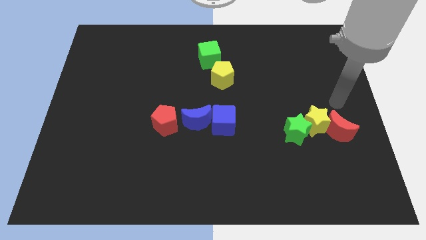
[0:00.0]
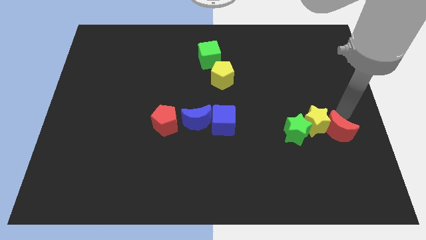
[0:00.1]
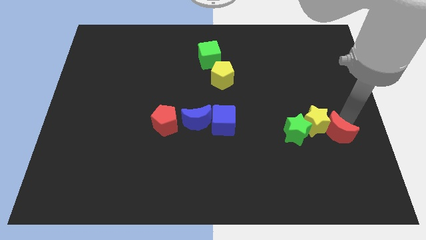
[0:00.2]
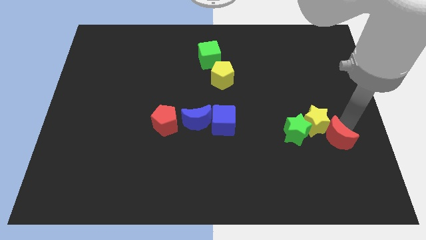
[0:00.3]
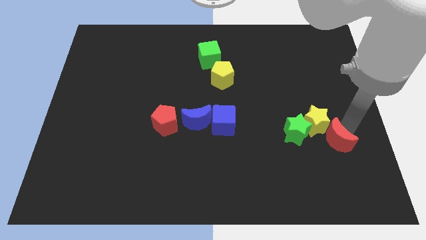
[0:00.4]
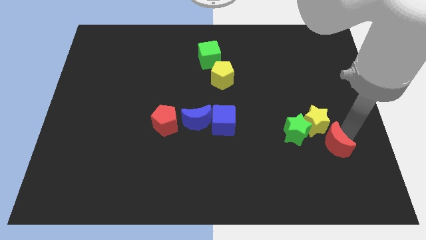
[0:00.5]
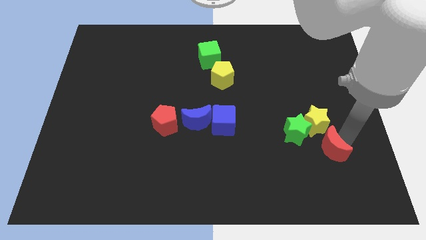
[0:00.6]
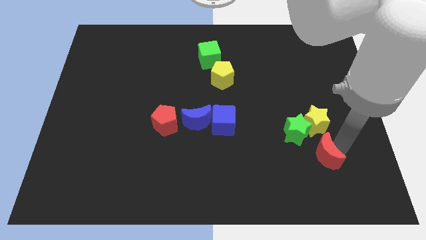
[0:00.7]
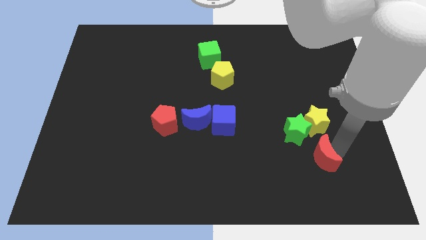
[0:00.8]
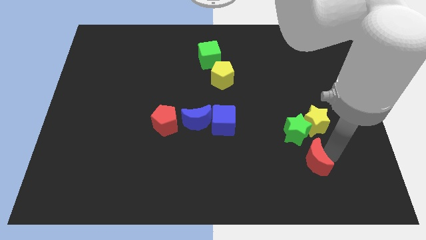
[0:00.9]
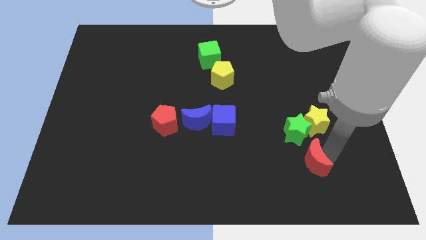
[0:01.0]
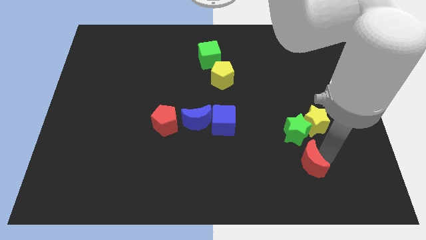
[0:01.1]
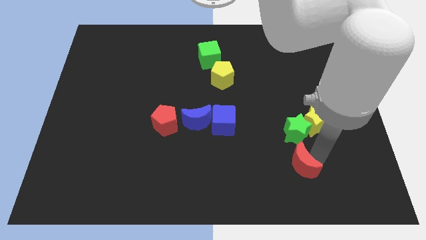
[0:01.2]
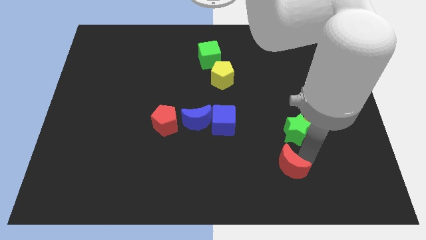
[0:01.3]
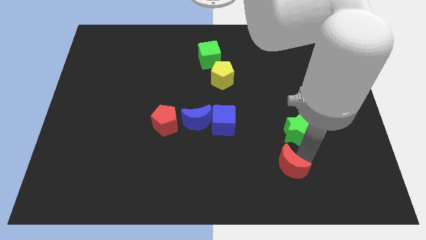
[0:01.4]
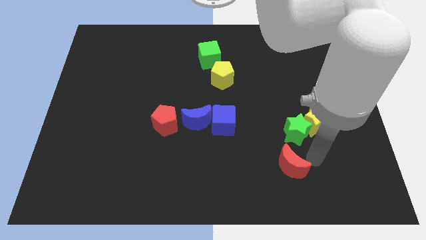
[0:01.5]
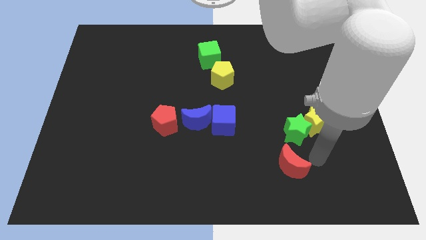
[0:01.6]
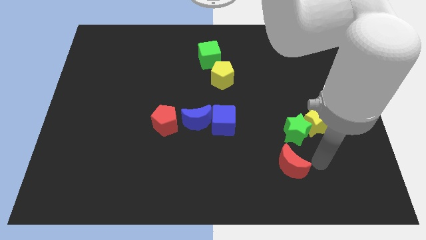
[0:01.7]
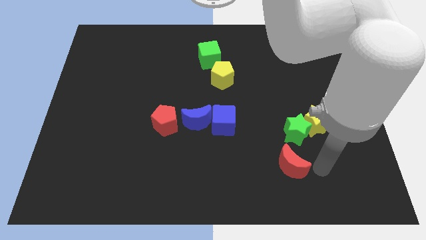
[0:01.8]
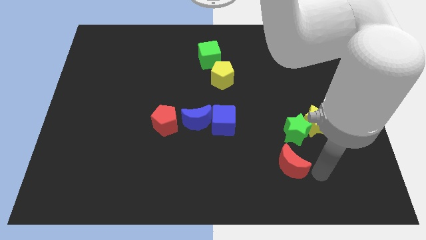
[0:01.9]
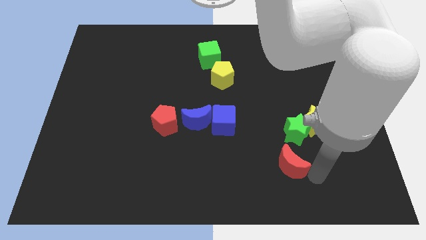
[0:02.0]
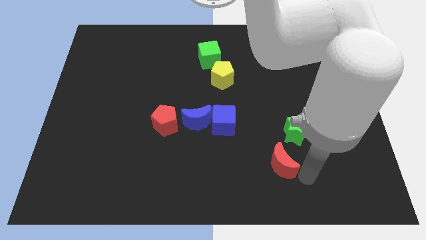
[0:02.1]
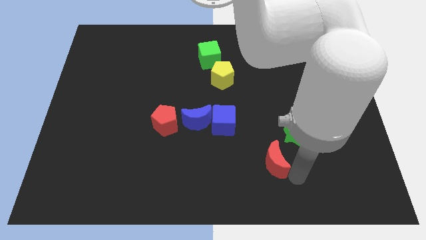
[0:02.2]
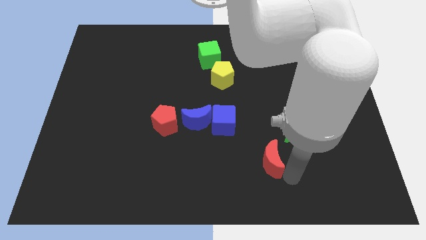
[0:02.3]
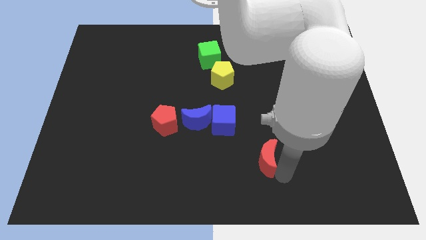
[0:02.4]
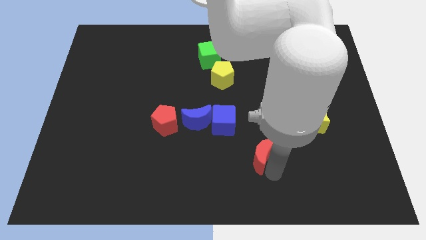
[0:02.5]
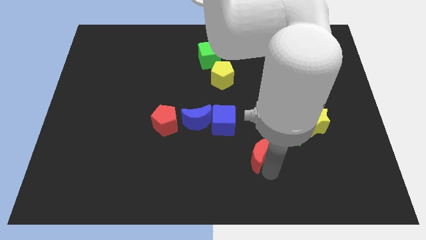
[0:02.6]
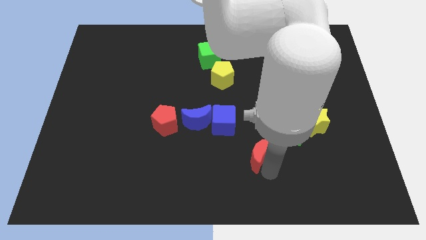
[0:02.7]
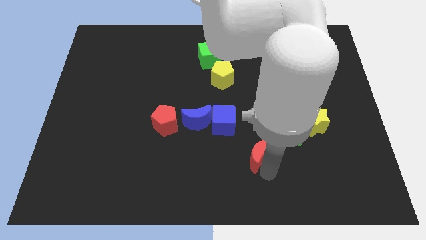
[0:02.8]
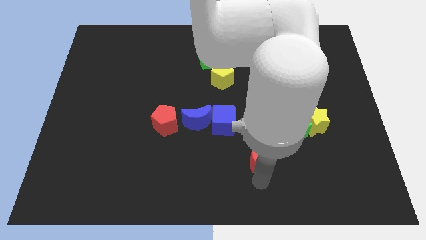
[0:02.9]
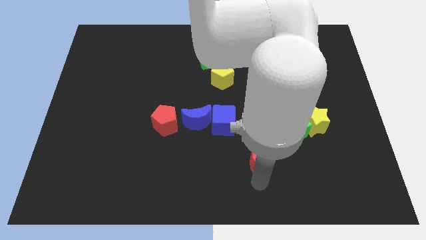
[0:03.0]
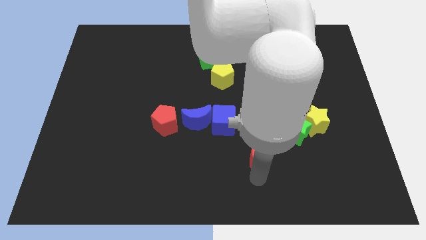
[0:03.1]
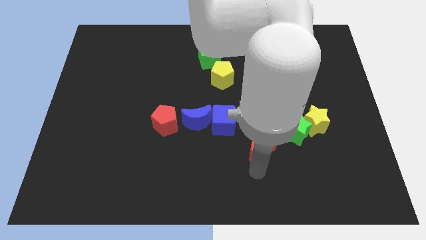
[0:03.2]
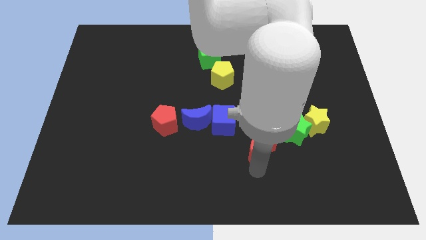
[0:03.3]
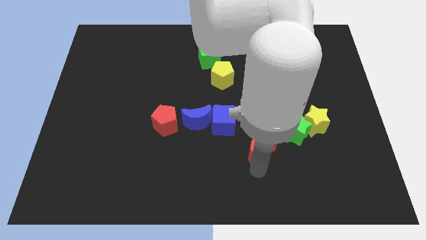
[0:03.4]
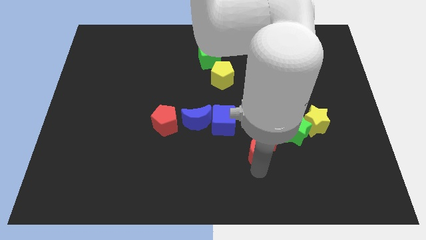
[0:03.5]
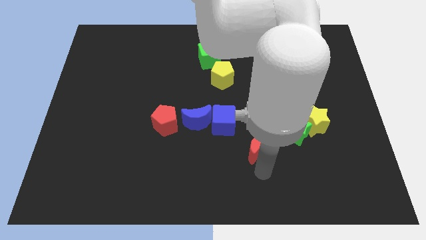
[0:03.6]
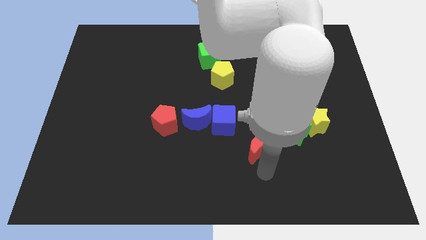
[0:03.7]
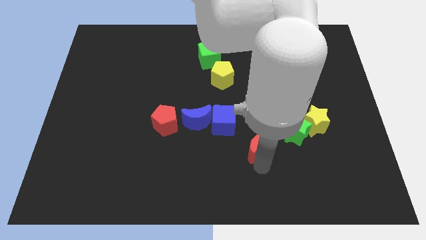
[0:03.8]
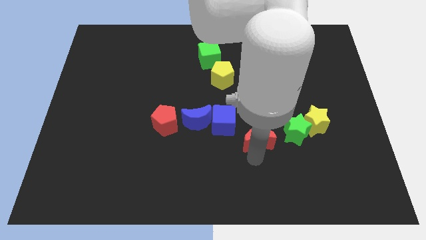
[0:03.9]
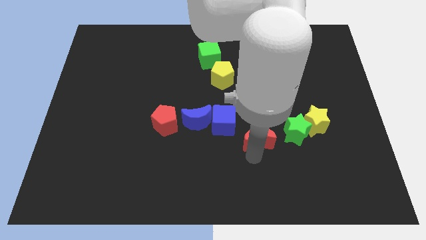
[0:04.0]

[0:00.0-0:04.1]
place red moon in between green star and blue cube

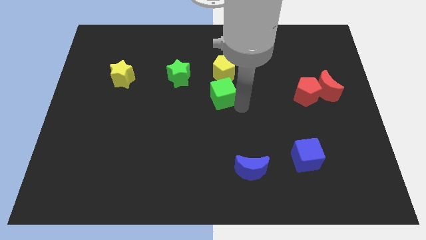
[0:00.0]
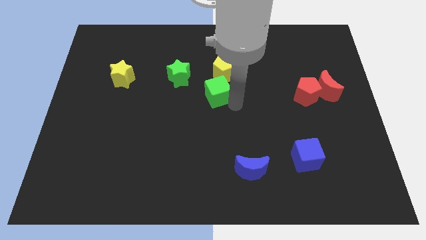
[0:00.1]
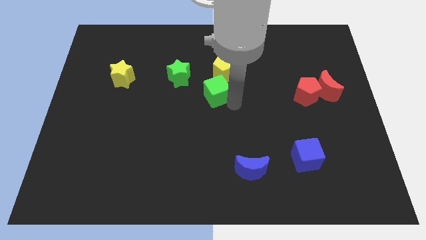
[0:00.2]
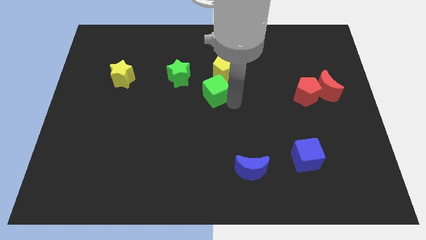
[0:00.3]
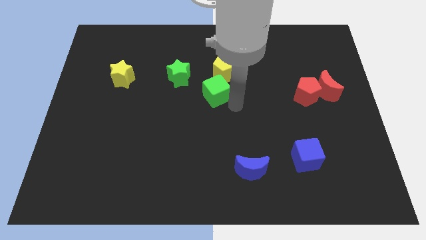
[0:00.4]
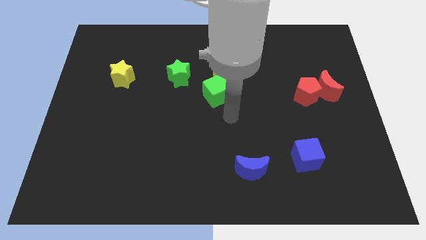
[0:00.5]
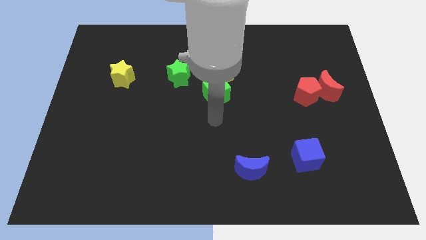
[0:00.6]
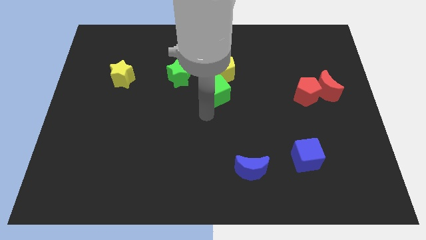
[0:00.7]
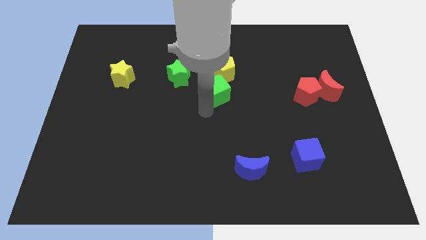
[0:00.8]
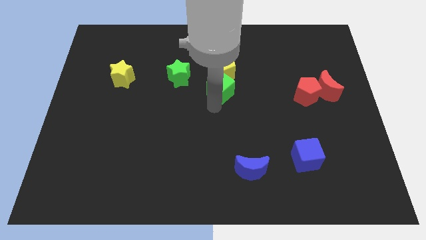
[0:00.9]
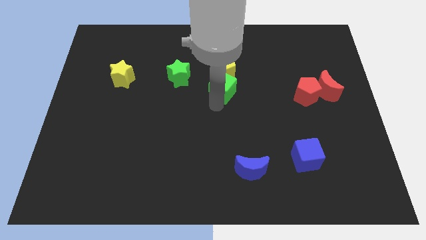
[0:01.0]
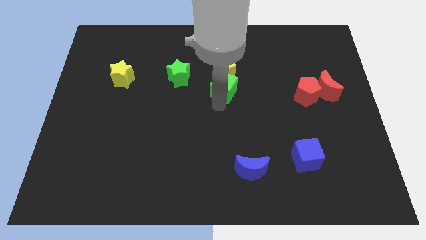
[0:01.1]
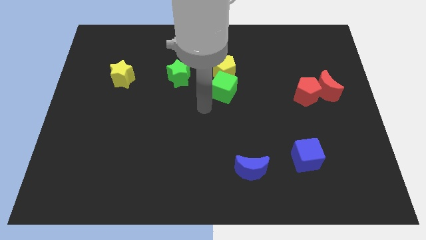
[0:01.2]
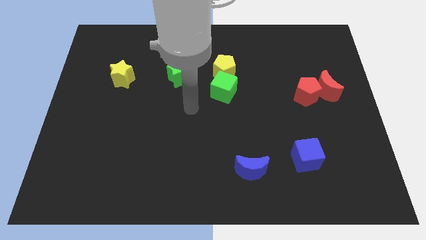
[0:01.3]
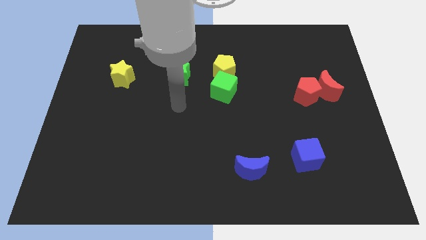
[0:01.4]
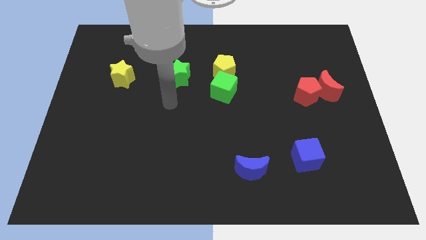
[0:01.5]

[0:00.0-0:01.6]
push the green cube towards the yellow pentagon

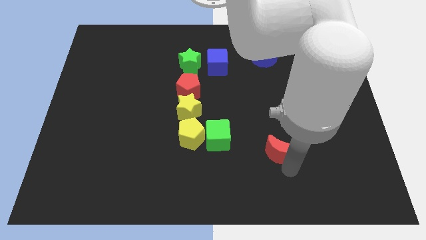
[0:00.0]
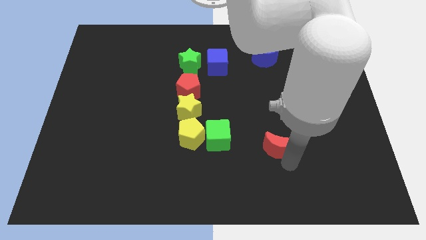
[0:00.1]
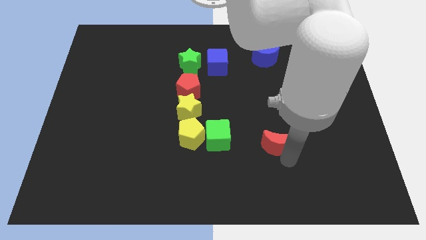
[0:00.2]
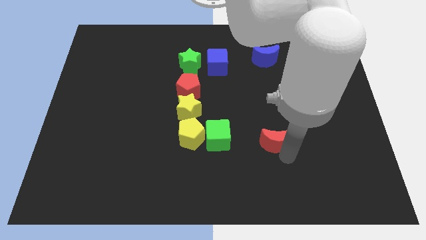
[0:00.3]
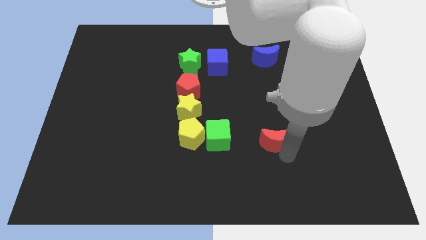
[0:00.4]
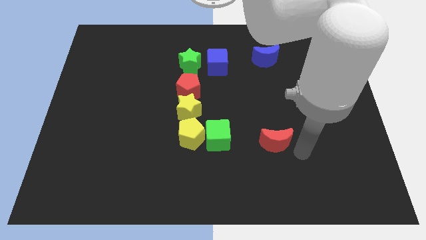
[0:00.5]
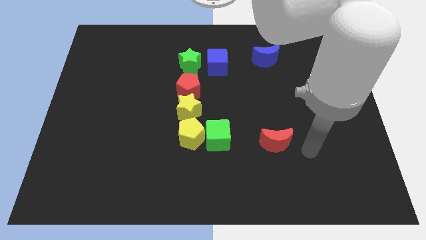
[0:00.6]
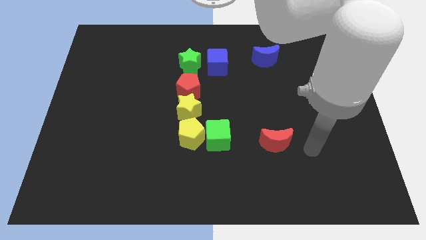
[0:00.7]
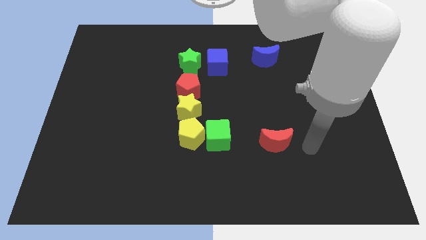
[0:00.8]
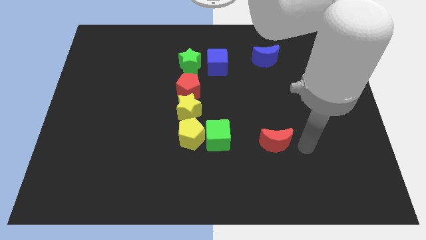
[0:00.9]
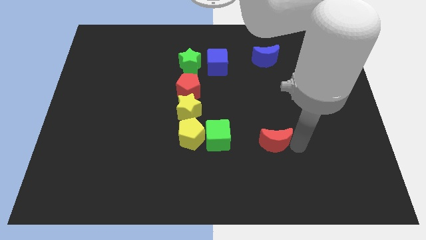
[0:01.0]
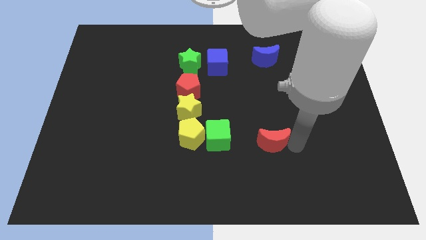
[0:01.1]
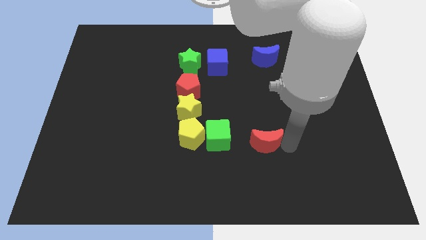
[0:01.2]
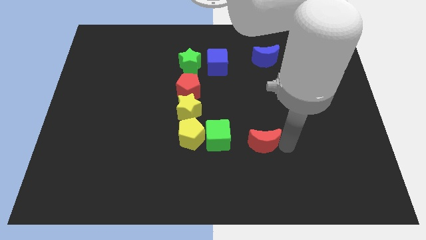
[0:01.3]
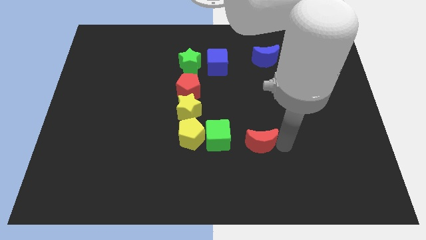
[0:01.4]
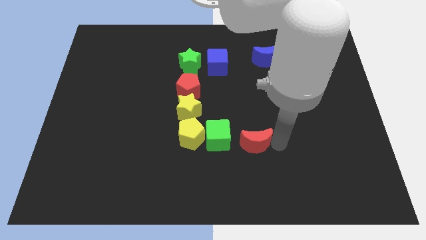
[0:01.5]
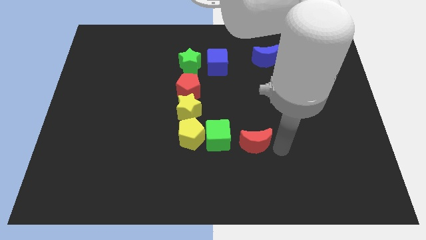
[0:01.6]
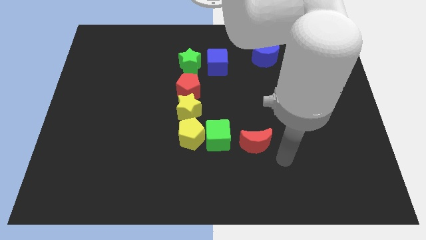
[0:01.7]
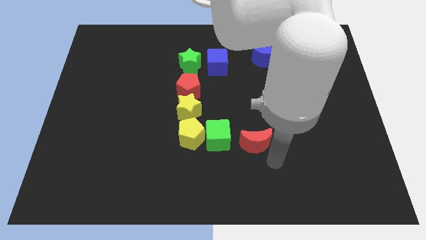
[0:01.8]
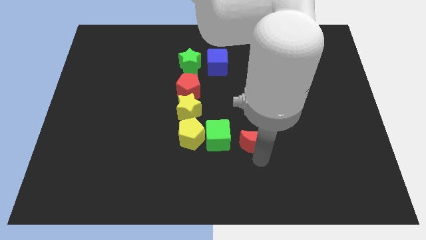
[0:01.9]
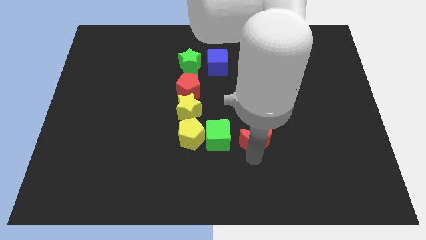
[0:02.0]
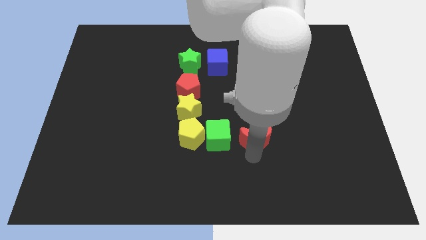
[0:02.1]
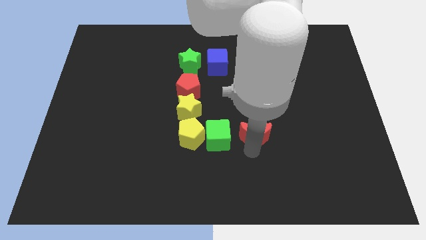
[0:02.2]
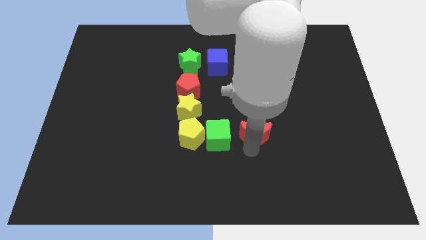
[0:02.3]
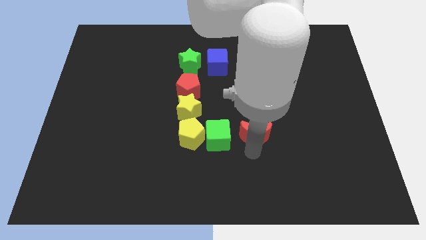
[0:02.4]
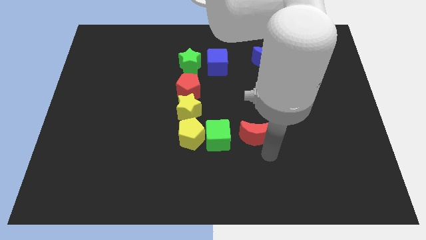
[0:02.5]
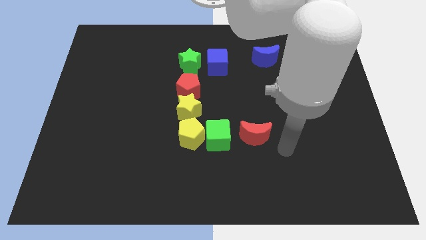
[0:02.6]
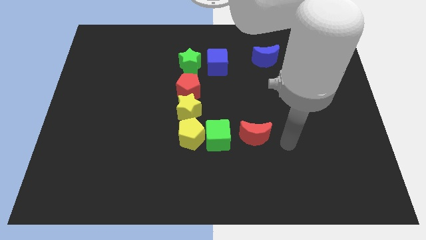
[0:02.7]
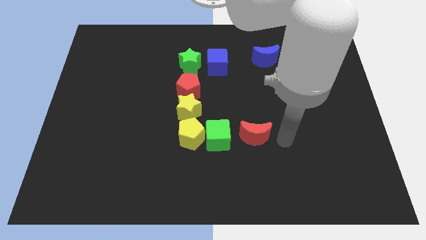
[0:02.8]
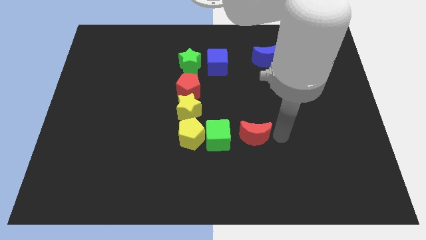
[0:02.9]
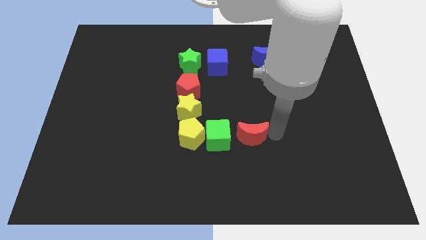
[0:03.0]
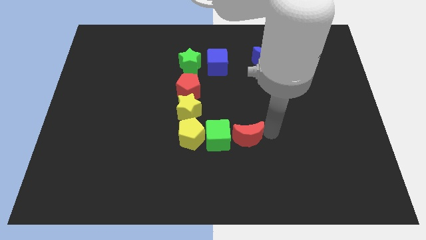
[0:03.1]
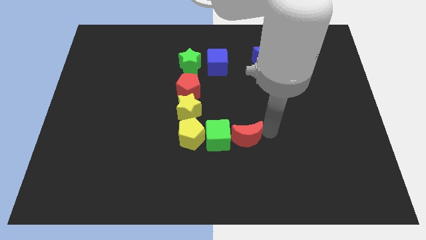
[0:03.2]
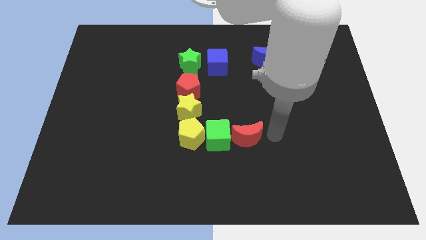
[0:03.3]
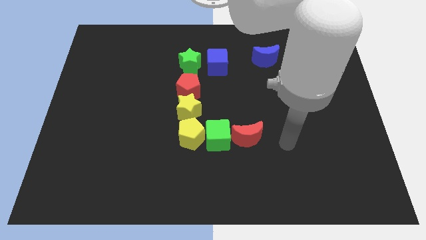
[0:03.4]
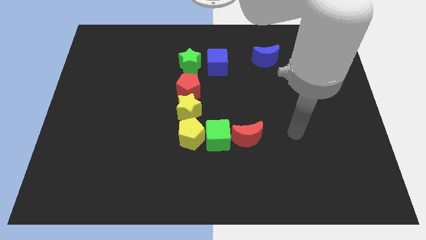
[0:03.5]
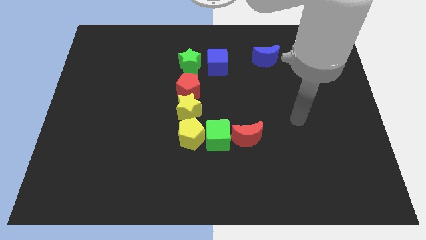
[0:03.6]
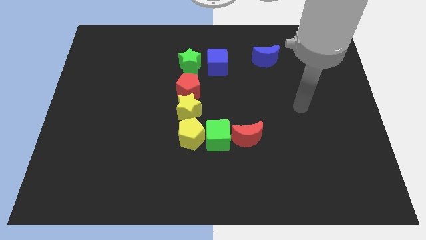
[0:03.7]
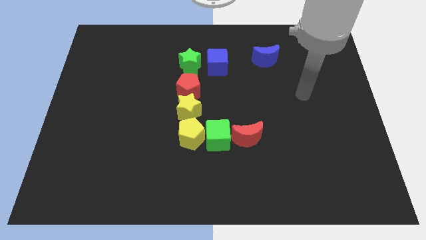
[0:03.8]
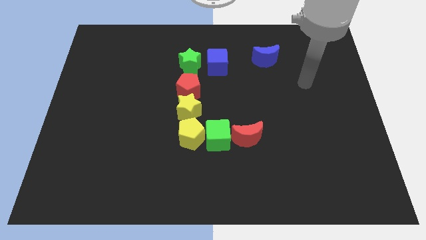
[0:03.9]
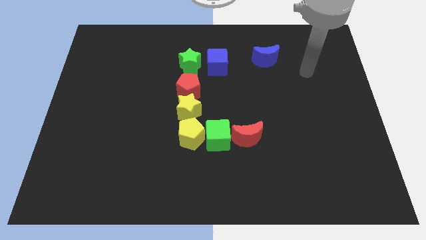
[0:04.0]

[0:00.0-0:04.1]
push red moon into green cube
